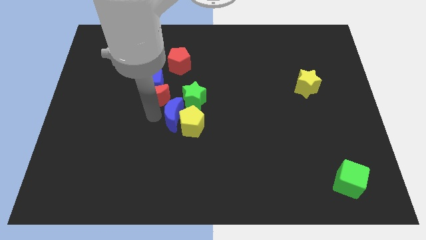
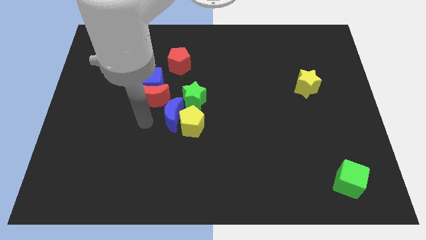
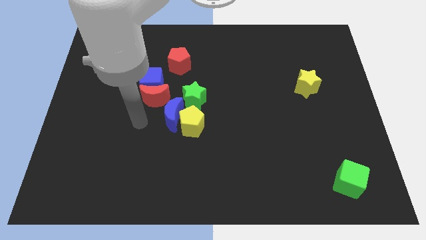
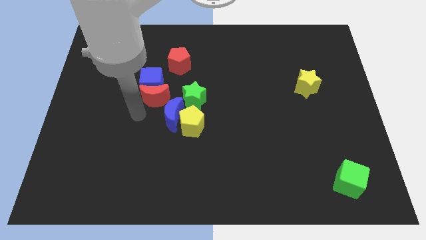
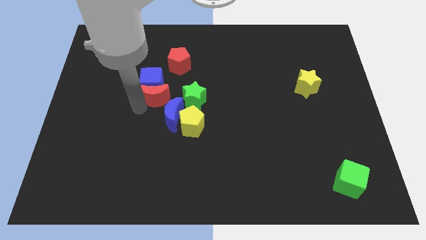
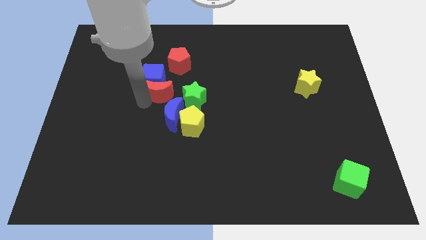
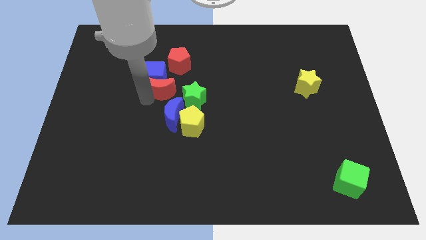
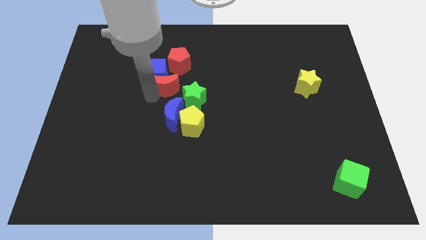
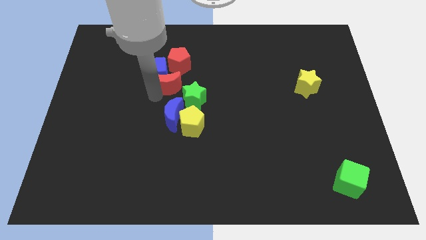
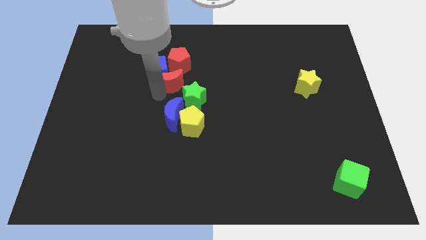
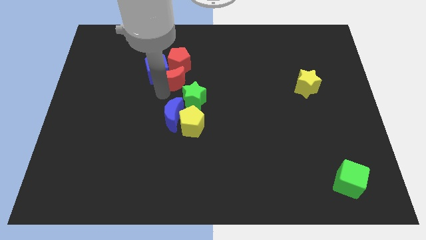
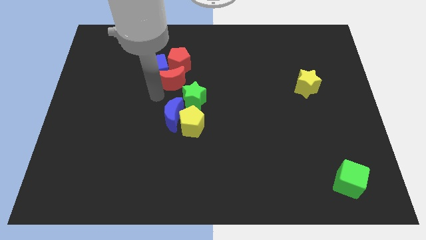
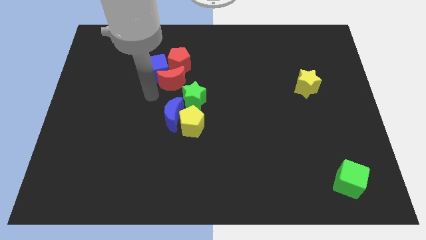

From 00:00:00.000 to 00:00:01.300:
move the red moon and blue cube to the red pentagon

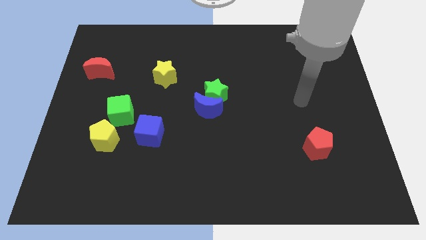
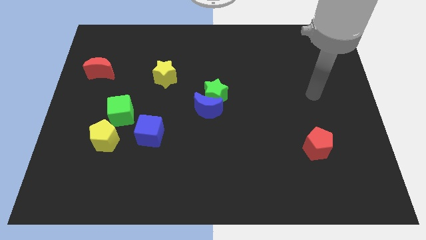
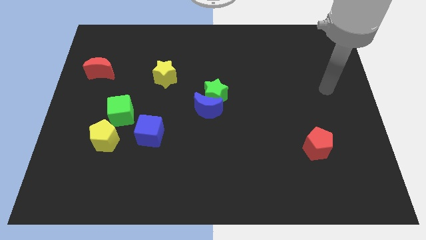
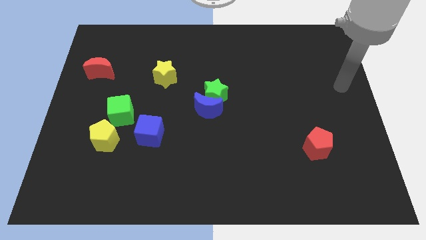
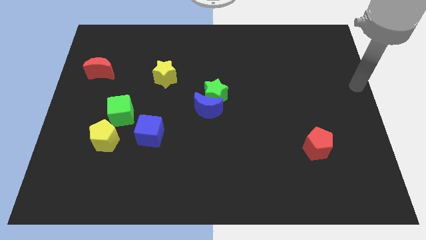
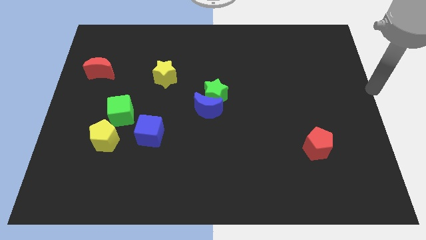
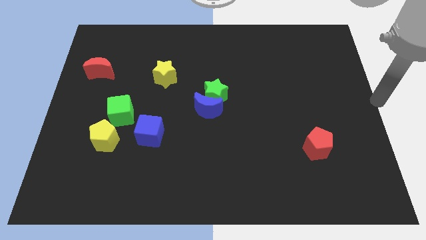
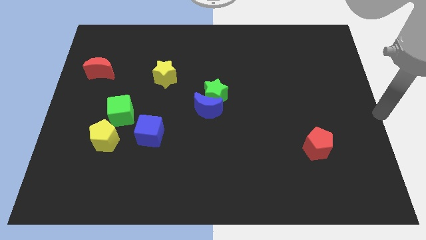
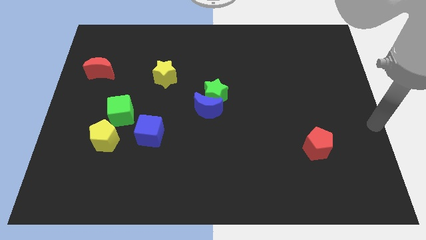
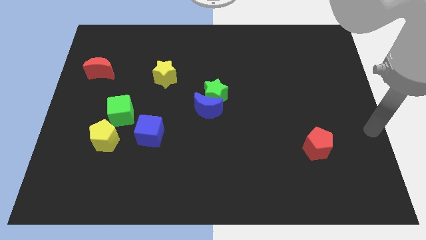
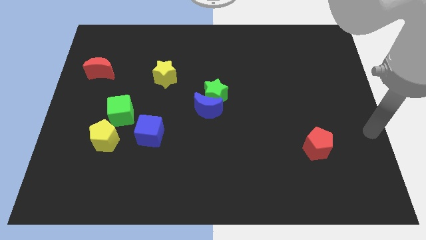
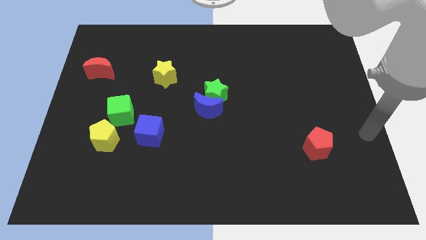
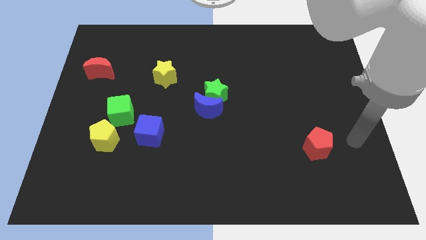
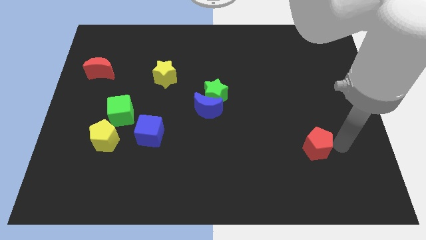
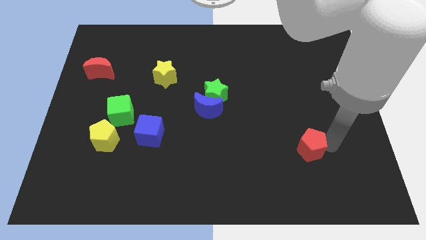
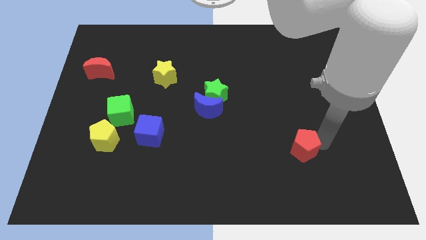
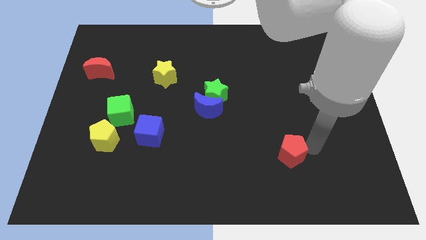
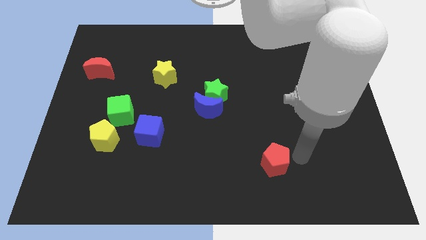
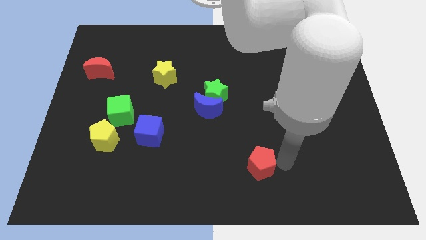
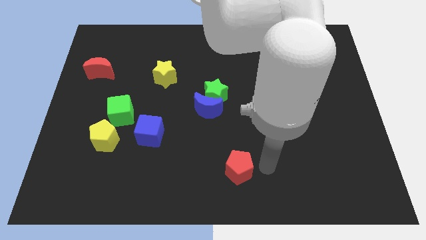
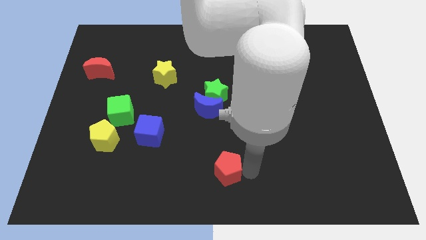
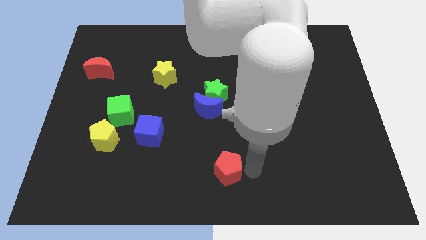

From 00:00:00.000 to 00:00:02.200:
push red pentagon towards bottom center

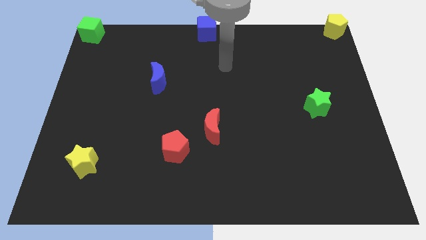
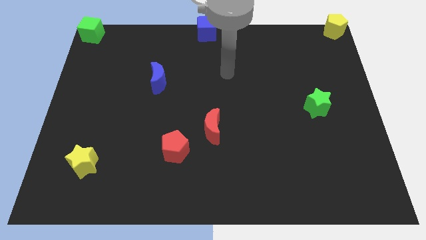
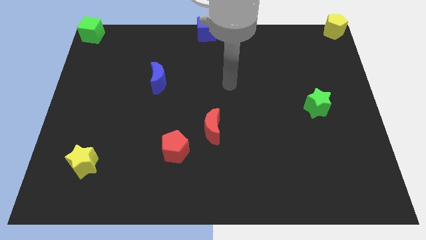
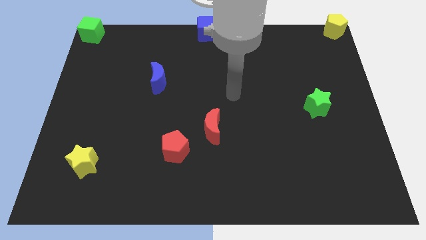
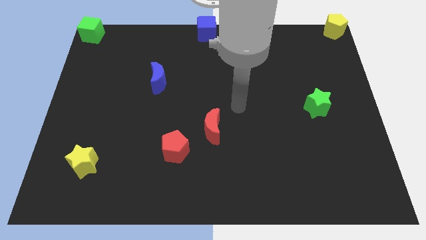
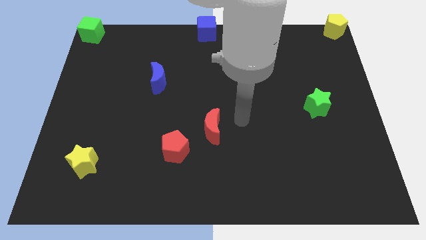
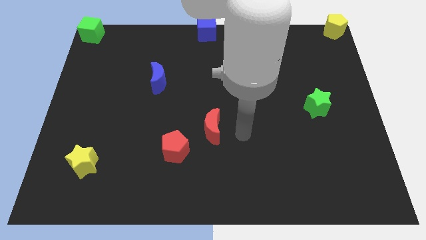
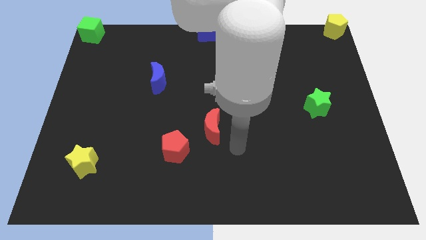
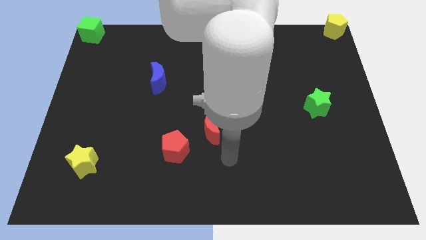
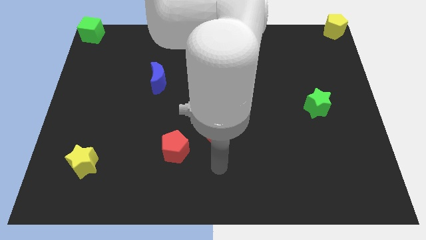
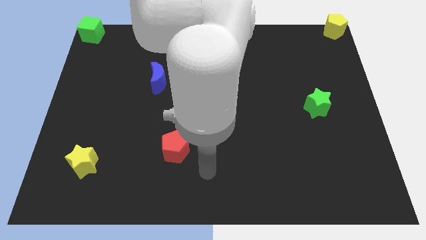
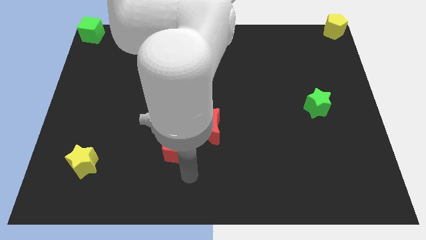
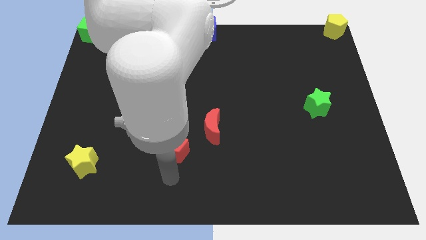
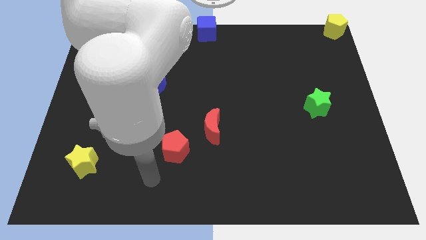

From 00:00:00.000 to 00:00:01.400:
place your hand under the red pentagon

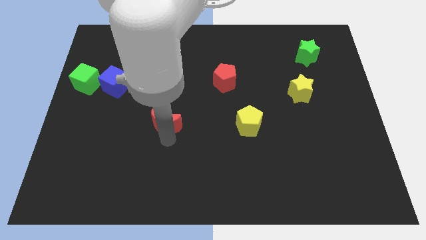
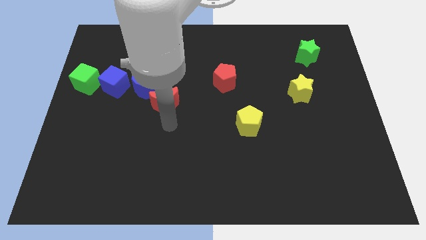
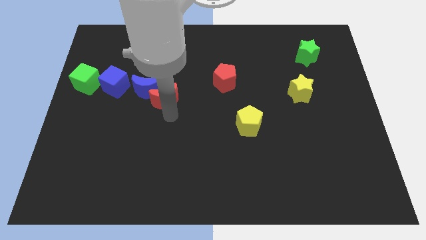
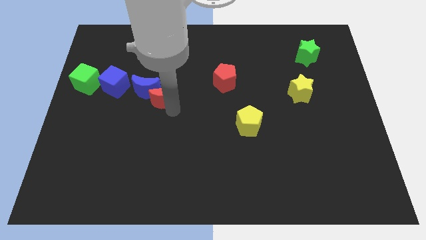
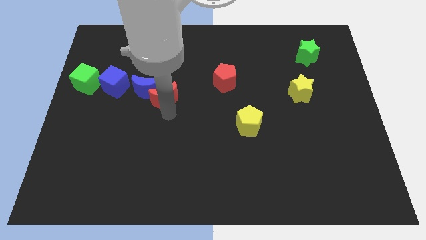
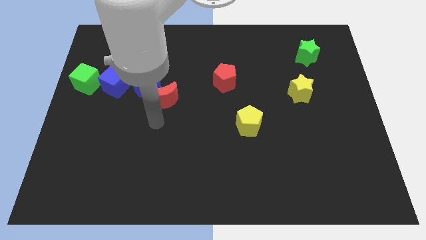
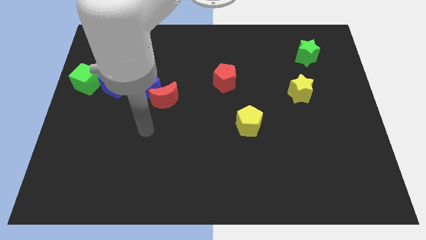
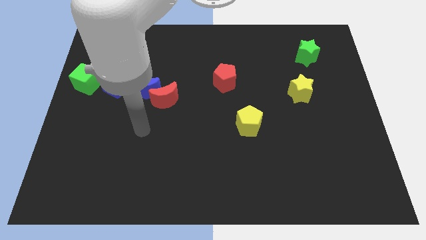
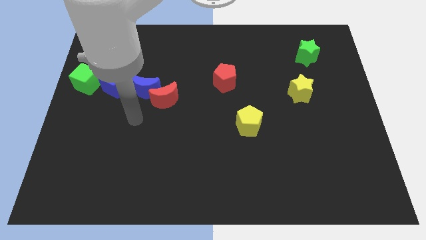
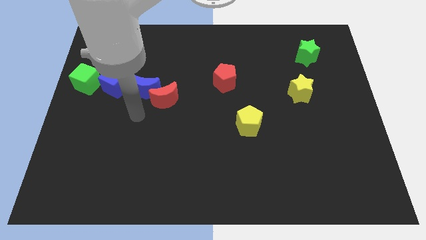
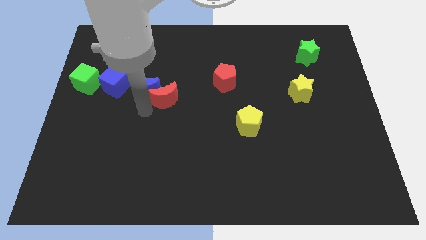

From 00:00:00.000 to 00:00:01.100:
move the red crescent to the right of the blue crescent

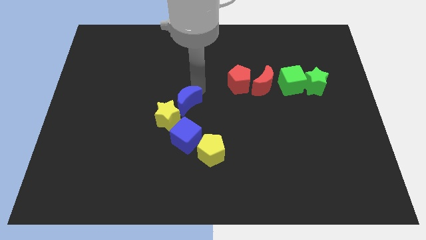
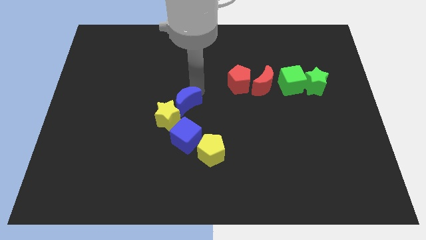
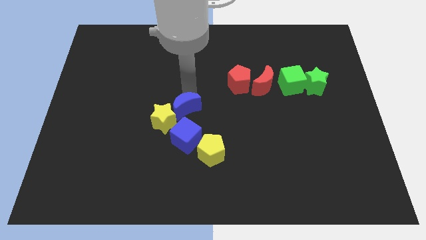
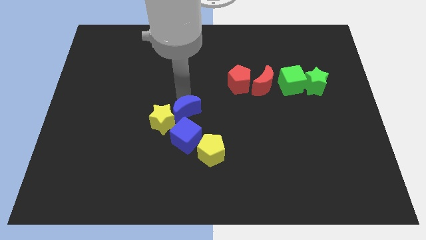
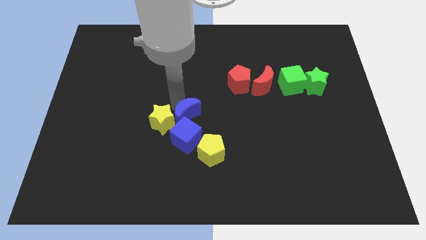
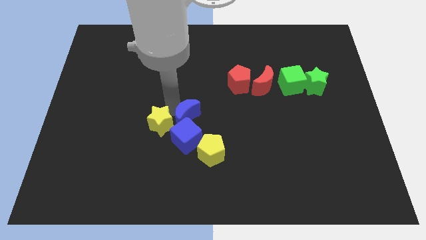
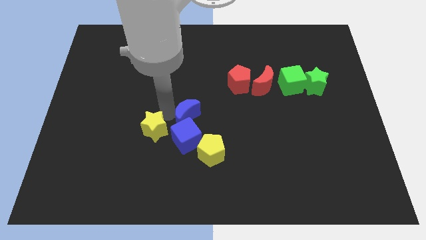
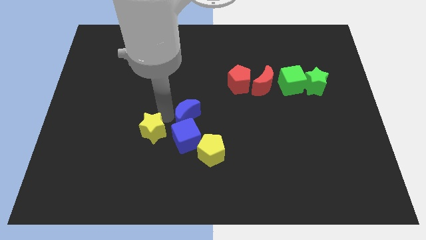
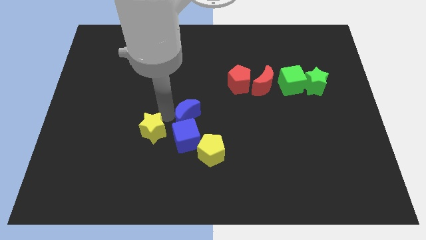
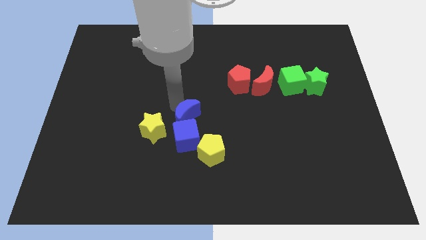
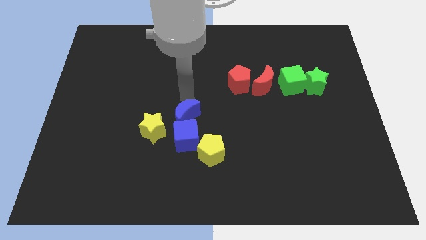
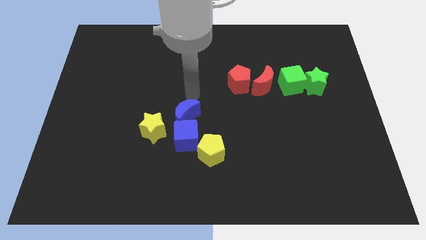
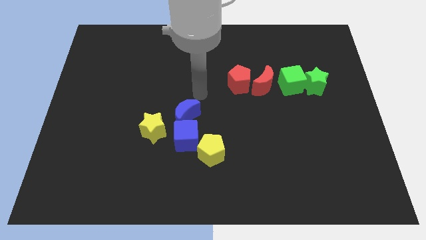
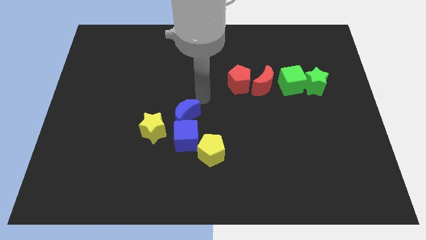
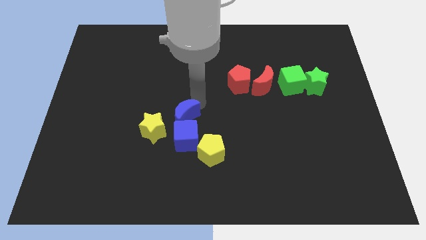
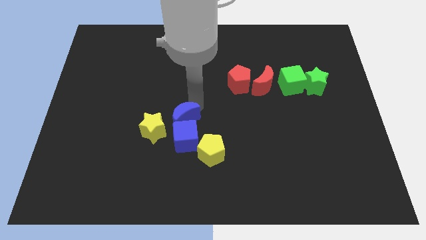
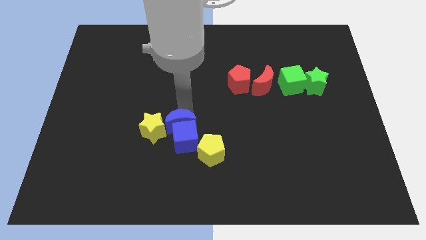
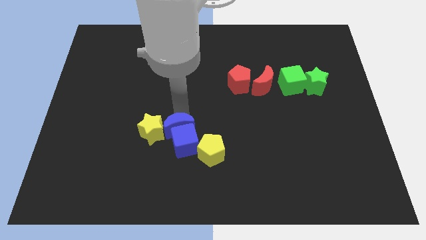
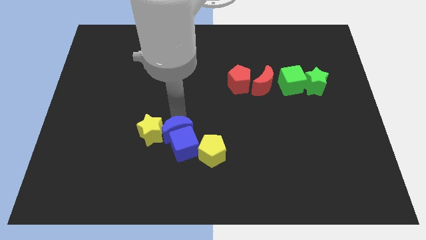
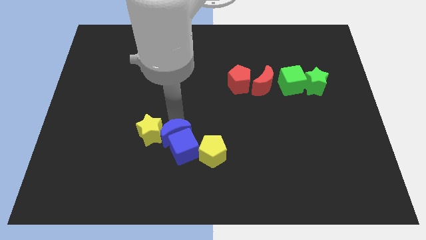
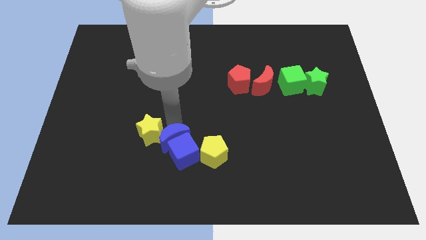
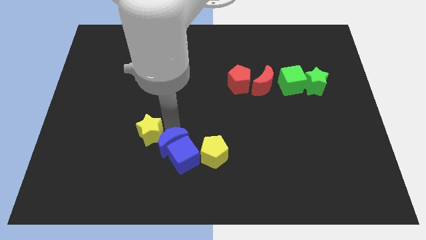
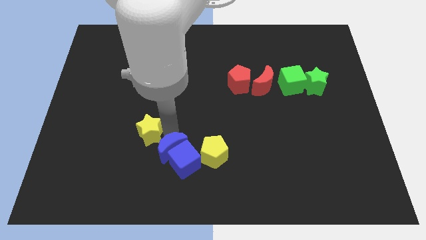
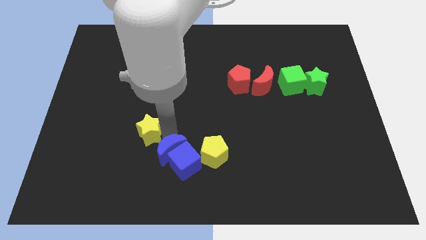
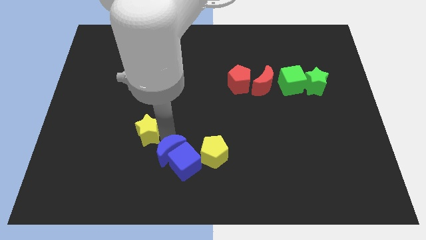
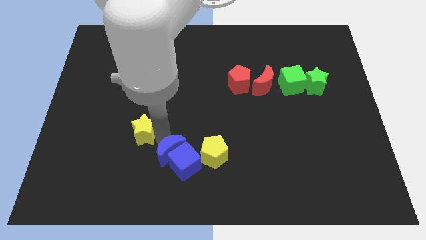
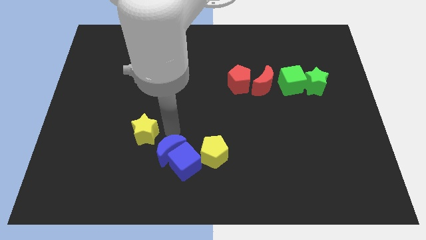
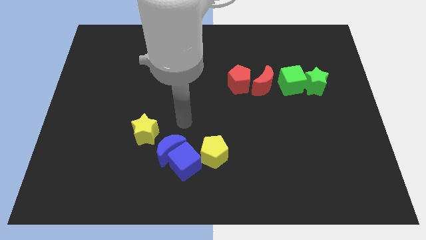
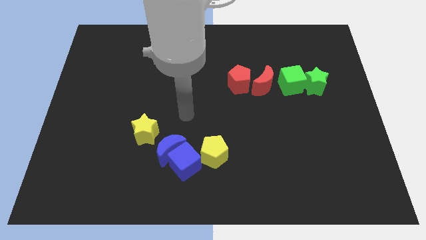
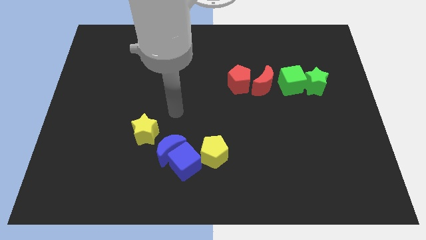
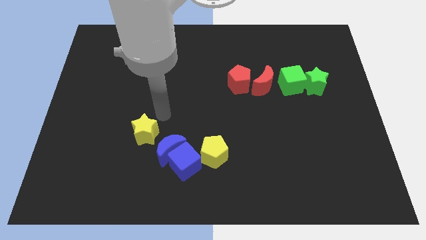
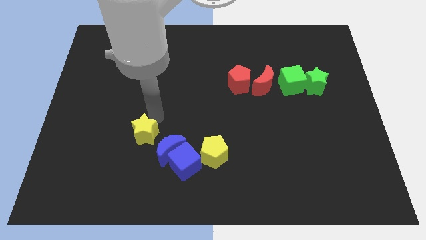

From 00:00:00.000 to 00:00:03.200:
push blue moon into the blue cube
